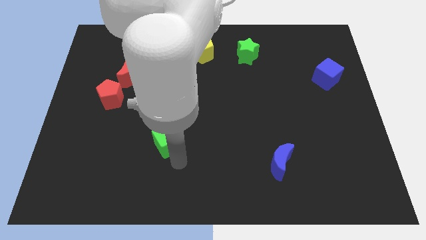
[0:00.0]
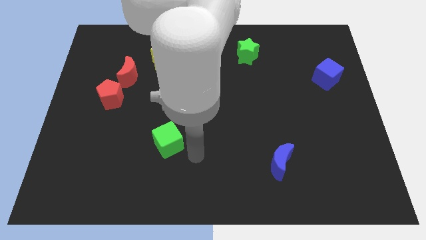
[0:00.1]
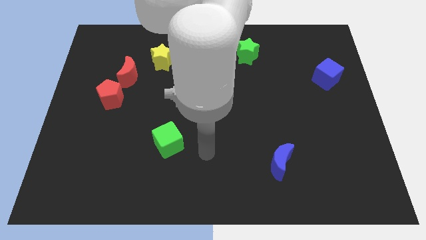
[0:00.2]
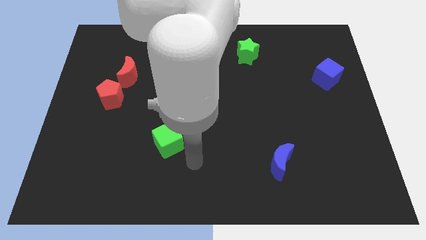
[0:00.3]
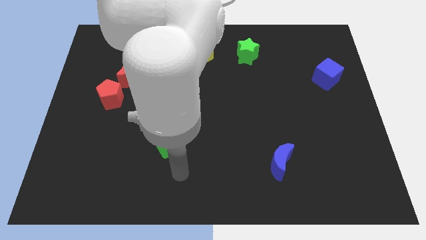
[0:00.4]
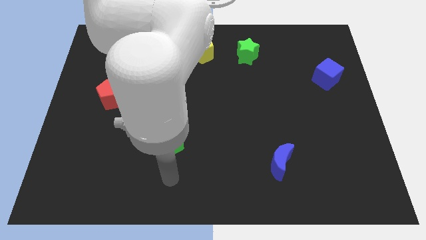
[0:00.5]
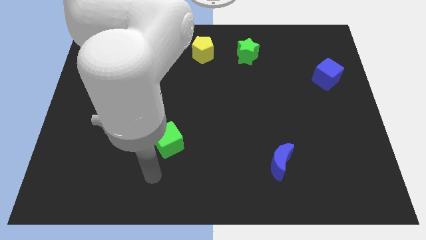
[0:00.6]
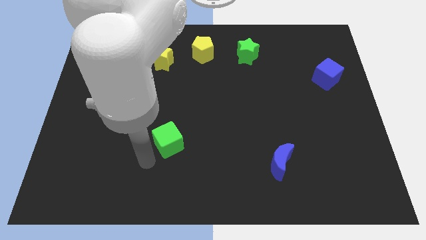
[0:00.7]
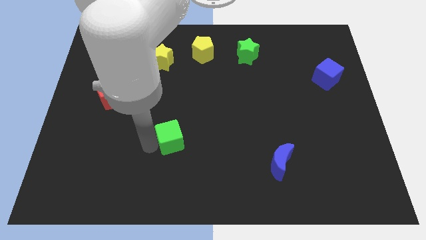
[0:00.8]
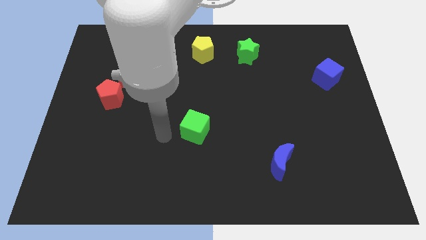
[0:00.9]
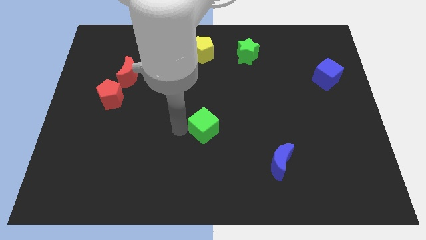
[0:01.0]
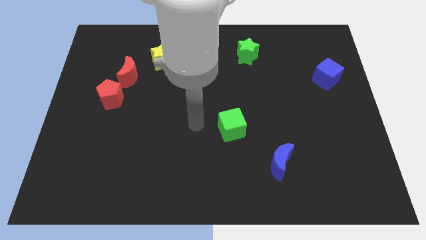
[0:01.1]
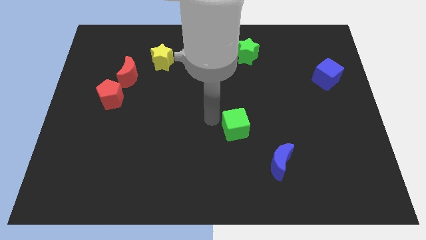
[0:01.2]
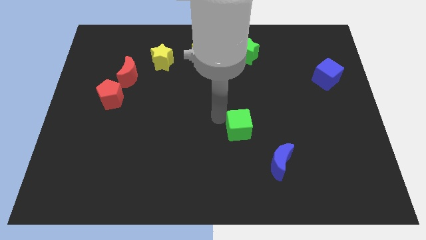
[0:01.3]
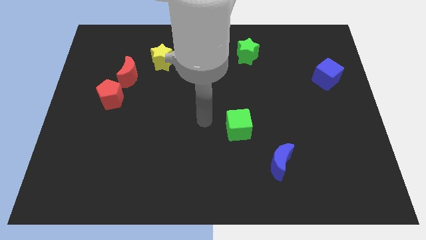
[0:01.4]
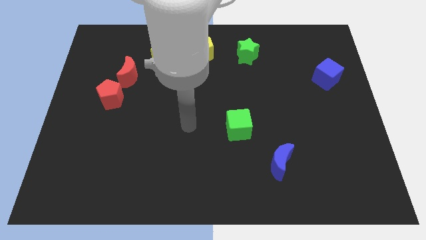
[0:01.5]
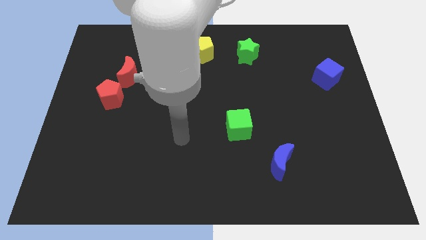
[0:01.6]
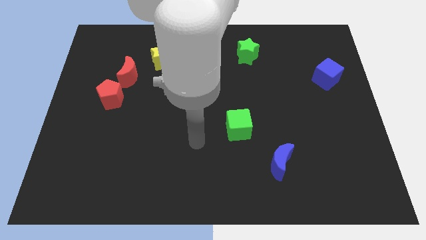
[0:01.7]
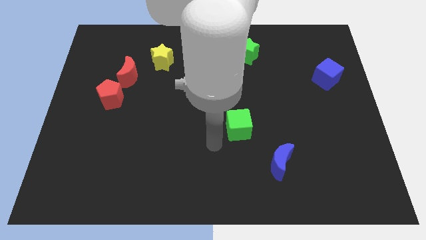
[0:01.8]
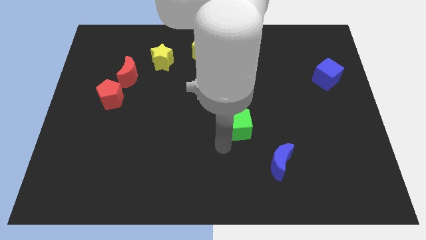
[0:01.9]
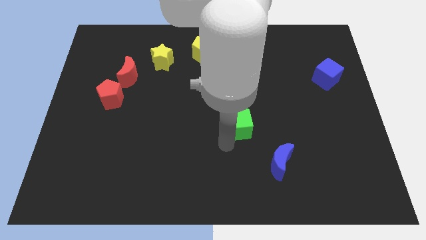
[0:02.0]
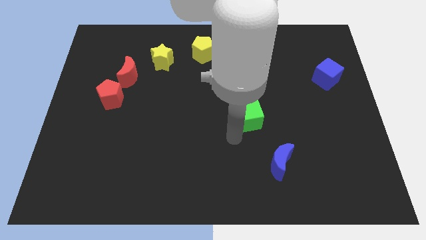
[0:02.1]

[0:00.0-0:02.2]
push green cube towards right side of the board

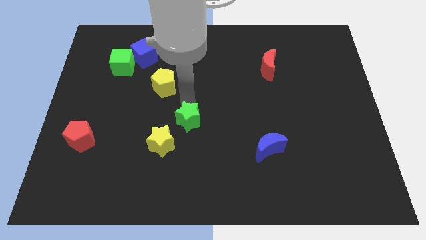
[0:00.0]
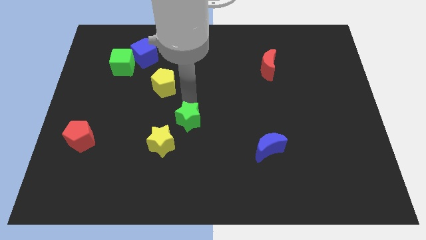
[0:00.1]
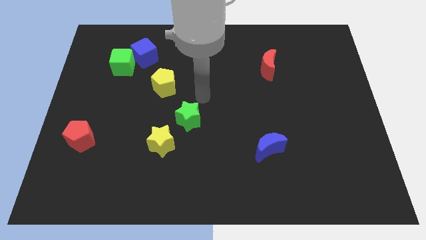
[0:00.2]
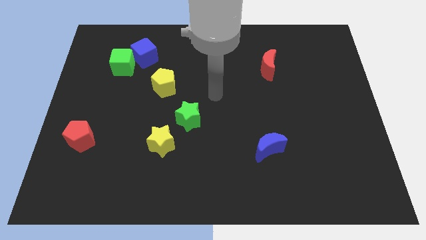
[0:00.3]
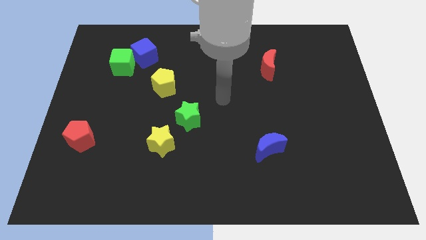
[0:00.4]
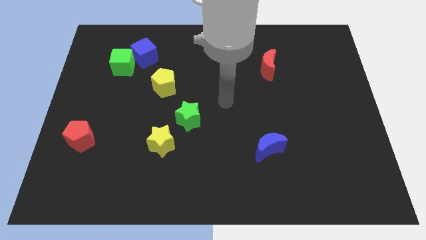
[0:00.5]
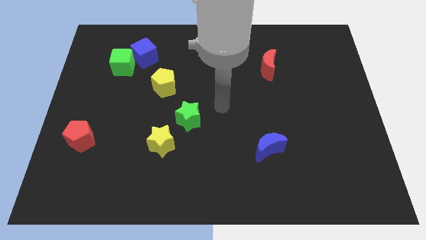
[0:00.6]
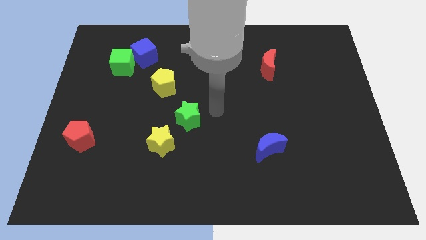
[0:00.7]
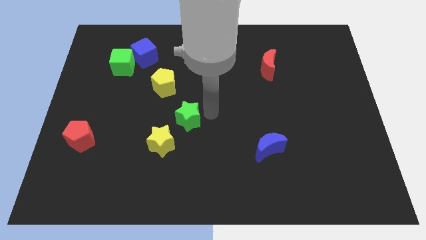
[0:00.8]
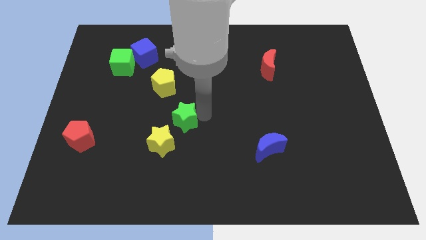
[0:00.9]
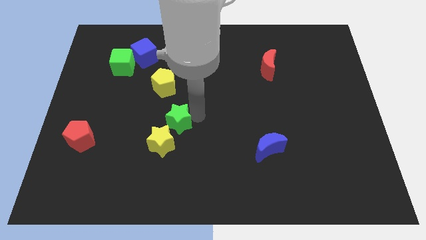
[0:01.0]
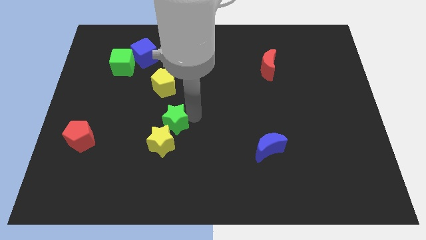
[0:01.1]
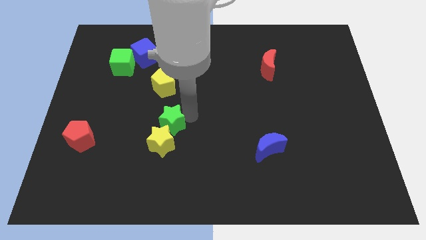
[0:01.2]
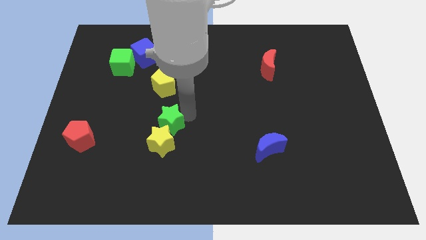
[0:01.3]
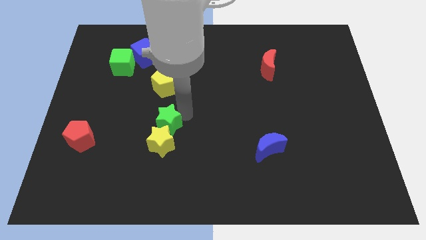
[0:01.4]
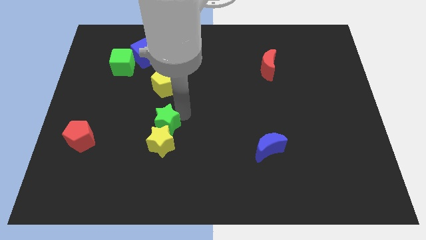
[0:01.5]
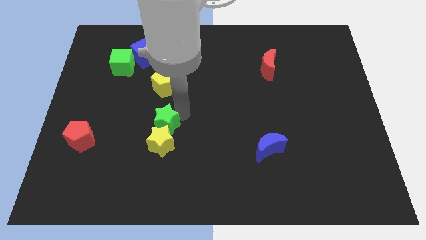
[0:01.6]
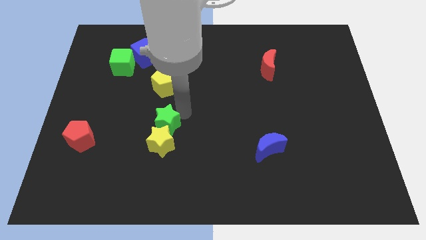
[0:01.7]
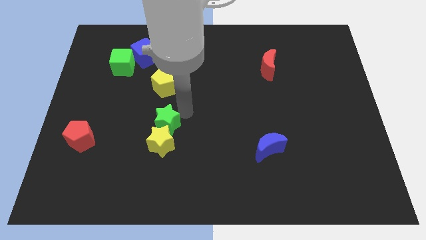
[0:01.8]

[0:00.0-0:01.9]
move green star into the yellow star

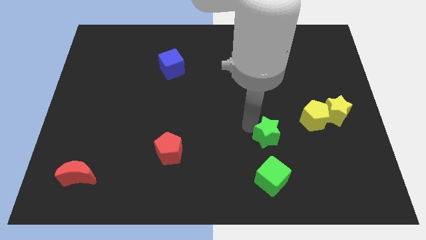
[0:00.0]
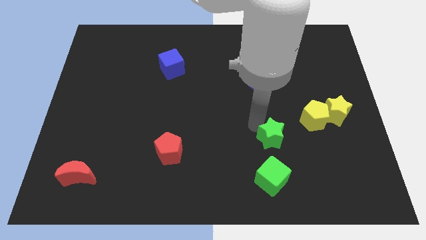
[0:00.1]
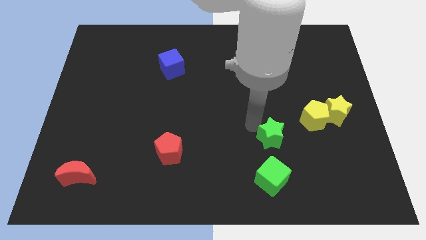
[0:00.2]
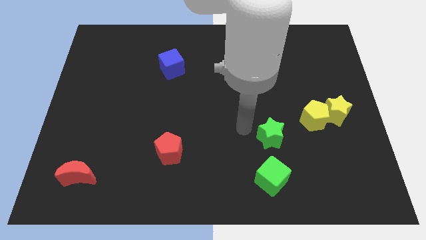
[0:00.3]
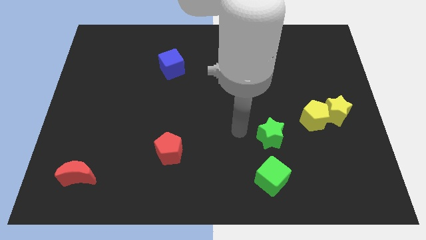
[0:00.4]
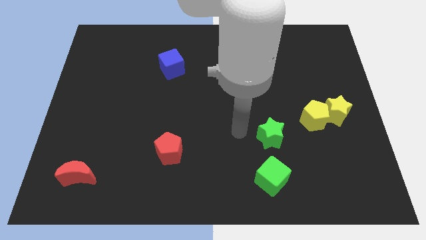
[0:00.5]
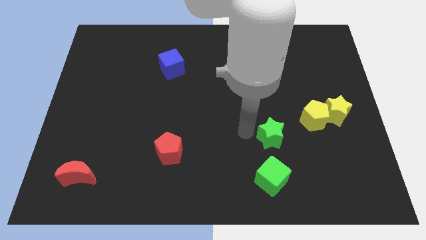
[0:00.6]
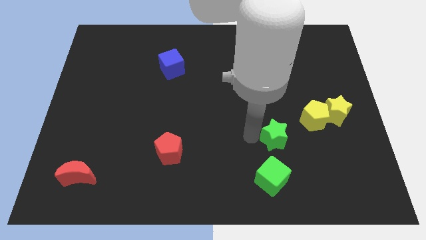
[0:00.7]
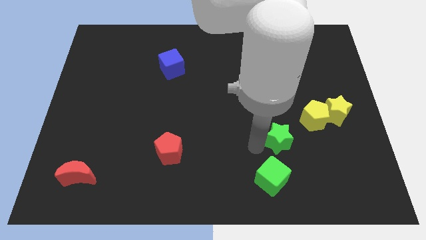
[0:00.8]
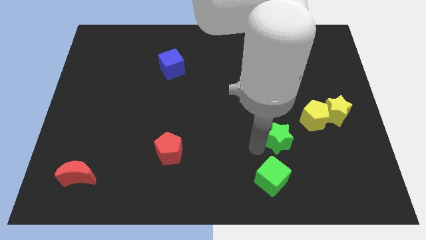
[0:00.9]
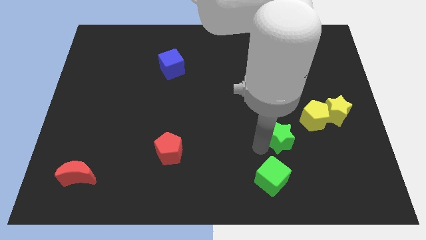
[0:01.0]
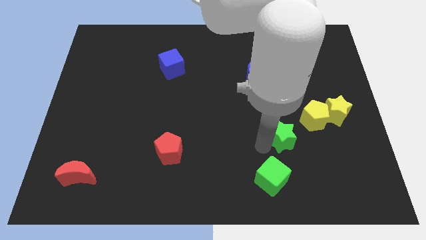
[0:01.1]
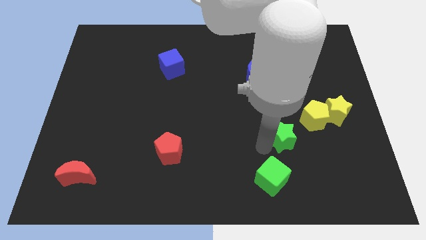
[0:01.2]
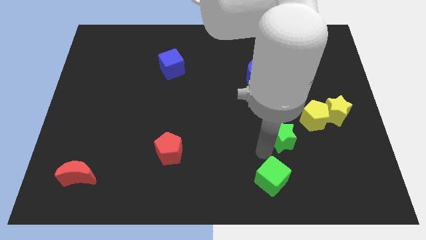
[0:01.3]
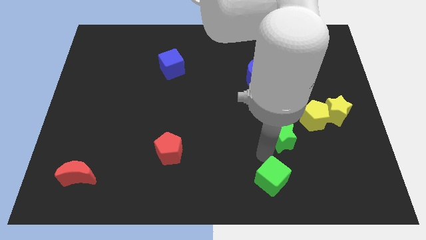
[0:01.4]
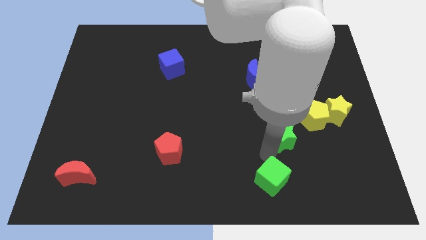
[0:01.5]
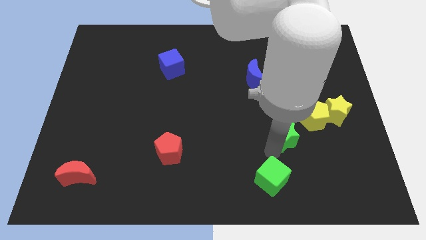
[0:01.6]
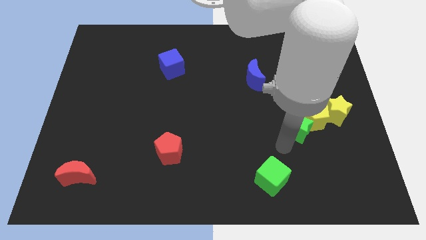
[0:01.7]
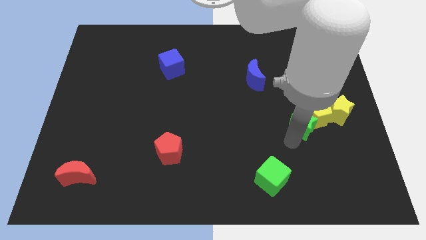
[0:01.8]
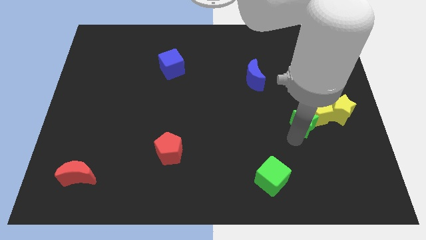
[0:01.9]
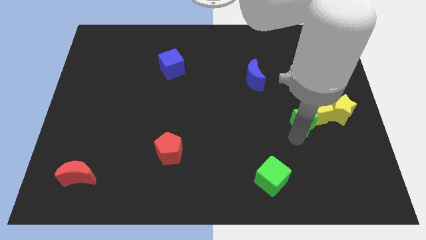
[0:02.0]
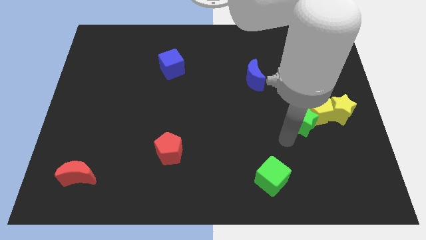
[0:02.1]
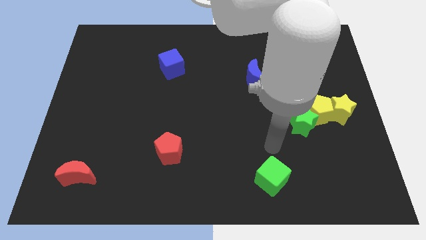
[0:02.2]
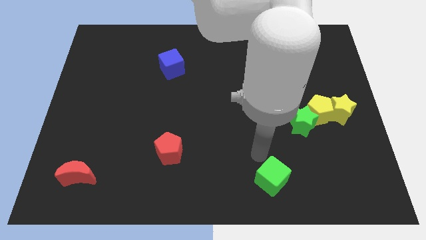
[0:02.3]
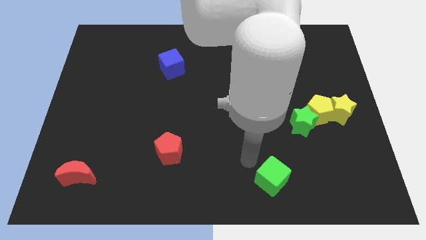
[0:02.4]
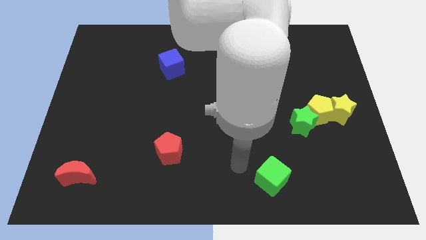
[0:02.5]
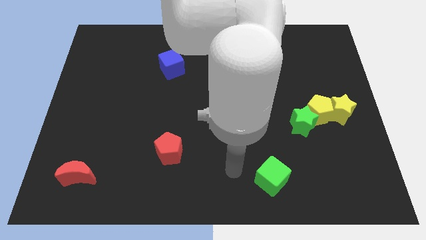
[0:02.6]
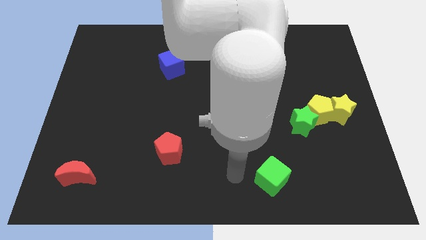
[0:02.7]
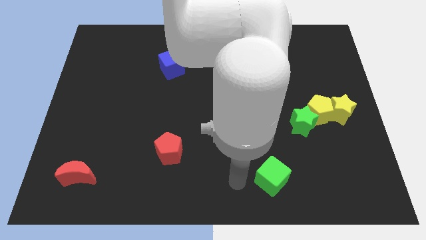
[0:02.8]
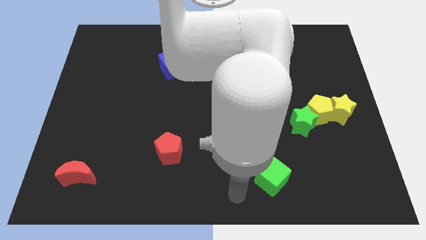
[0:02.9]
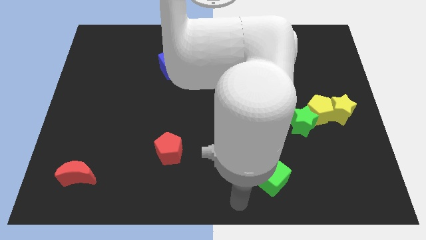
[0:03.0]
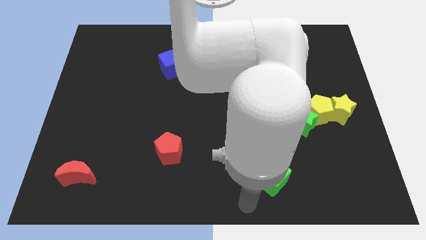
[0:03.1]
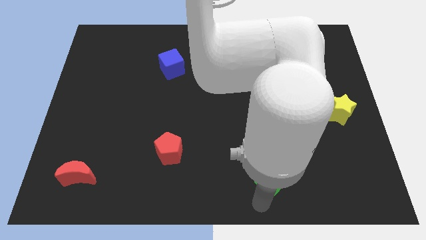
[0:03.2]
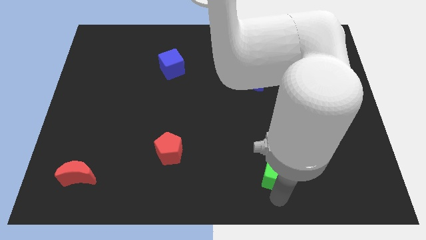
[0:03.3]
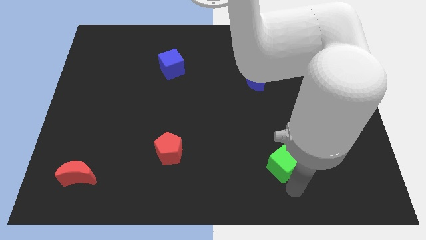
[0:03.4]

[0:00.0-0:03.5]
move green star to yellow pentagon

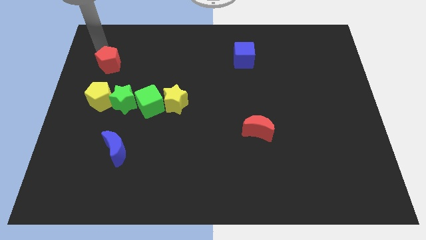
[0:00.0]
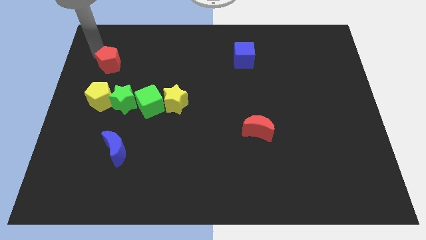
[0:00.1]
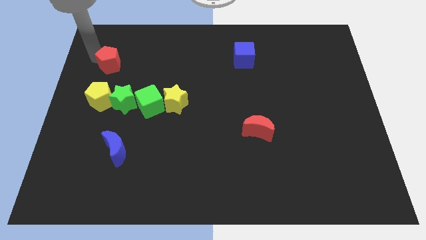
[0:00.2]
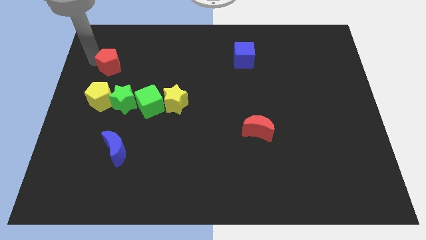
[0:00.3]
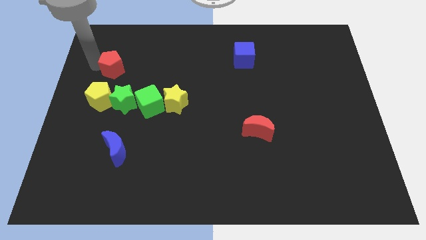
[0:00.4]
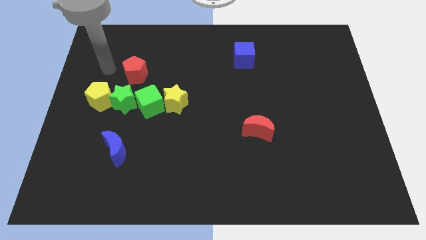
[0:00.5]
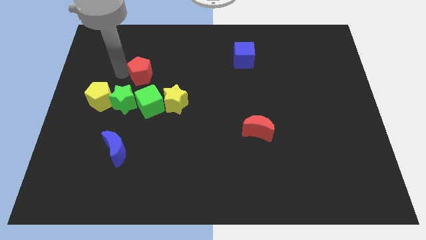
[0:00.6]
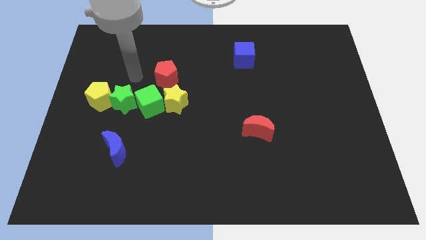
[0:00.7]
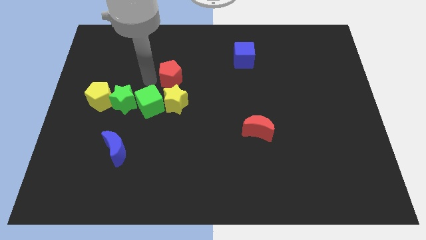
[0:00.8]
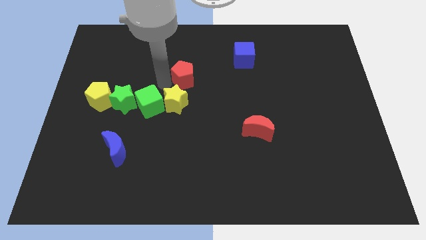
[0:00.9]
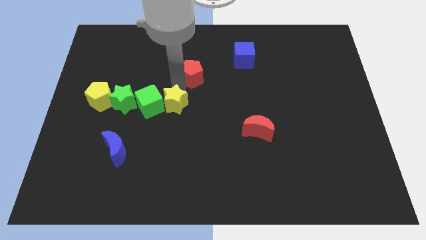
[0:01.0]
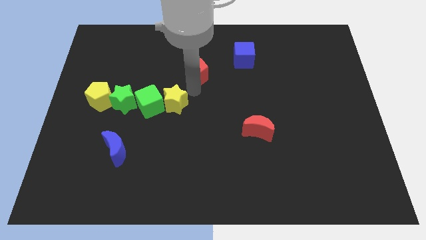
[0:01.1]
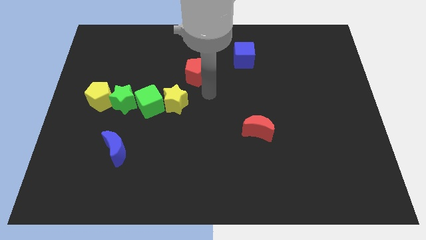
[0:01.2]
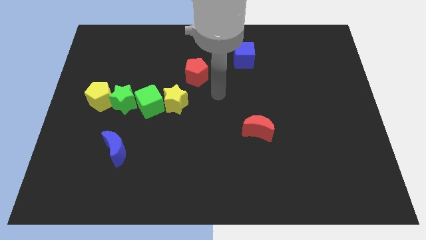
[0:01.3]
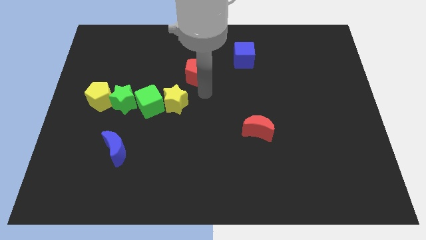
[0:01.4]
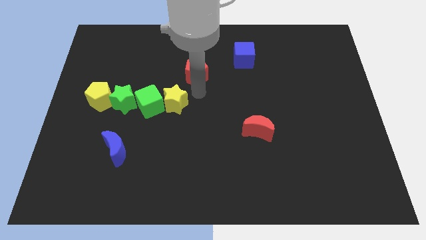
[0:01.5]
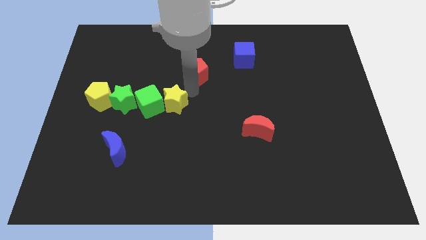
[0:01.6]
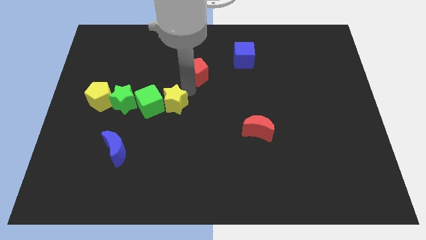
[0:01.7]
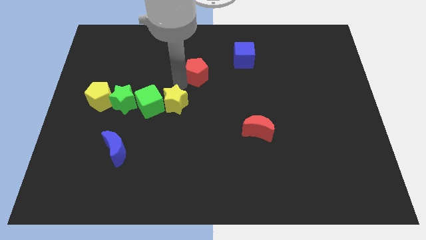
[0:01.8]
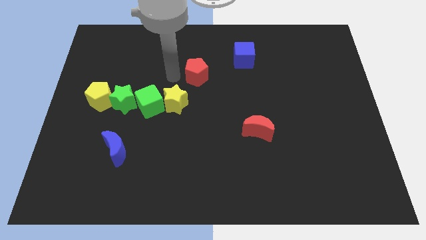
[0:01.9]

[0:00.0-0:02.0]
move red pentagon towards the center
